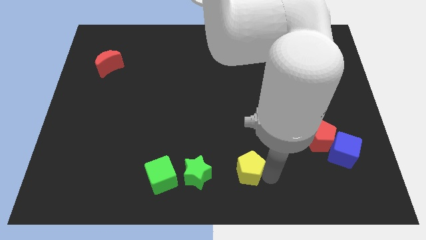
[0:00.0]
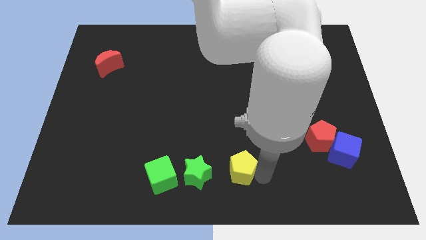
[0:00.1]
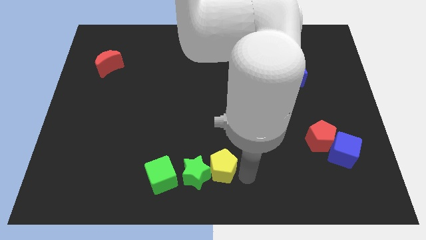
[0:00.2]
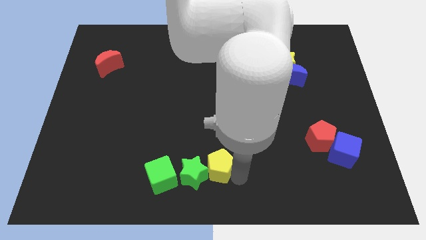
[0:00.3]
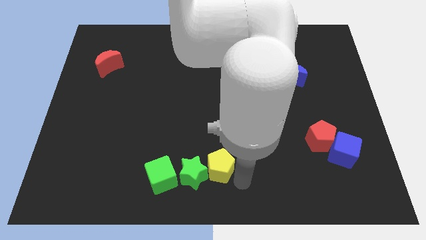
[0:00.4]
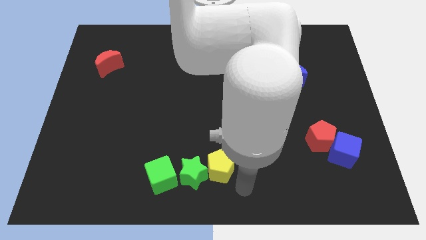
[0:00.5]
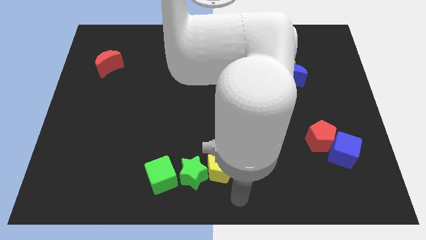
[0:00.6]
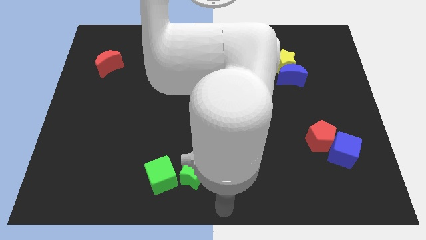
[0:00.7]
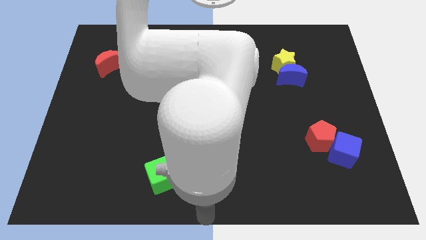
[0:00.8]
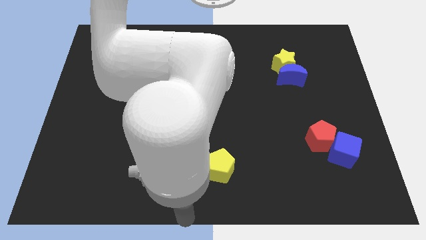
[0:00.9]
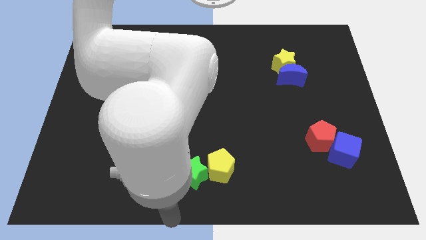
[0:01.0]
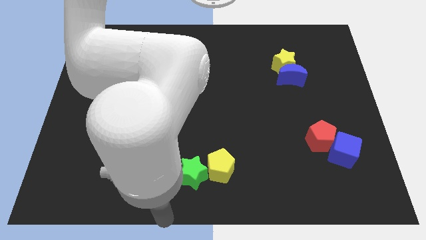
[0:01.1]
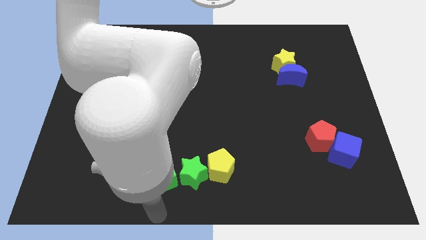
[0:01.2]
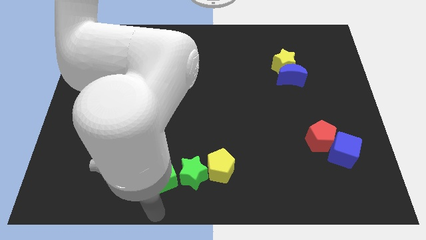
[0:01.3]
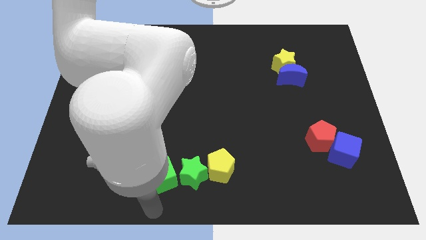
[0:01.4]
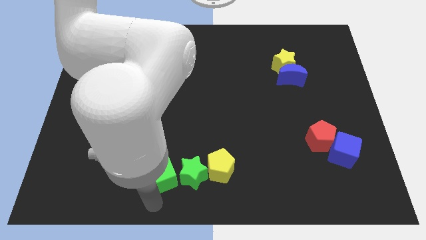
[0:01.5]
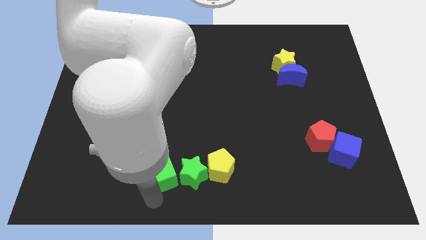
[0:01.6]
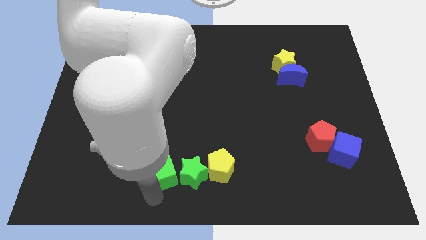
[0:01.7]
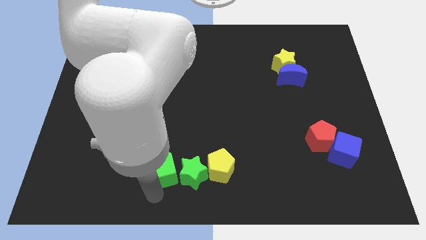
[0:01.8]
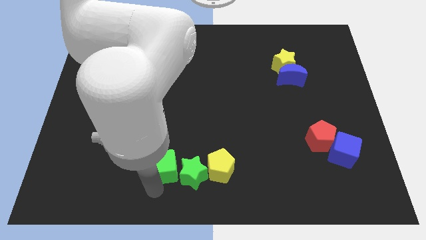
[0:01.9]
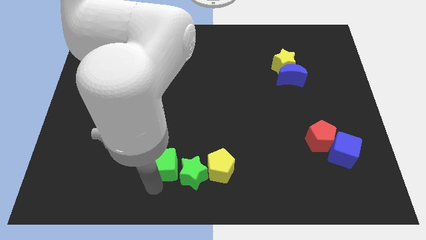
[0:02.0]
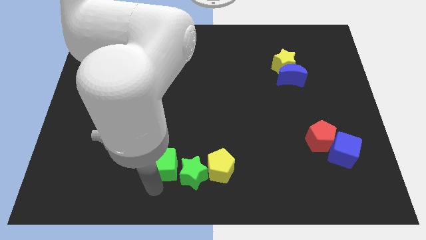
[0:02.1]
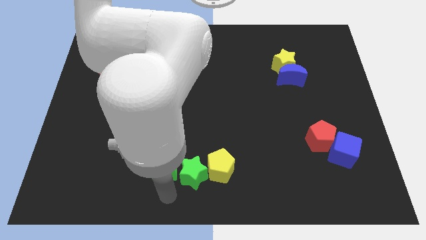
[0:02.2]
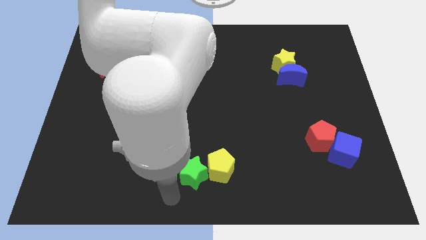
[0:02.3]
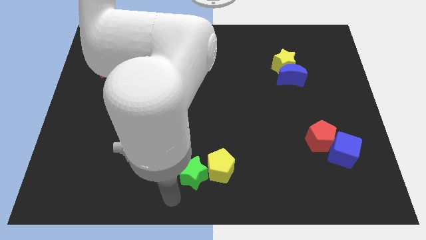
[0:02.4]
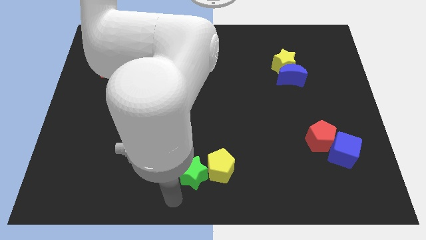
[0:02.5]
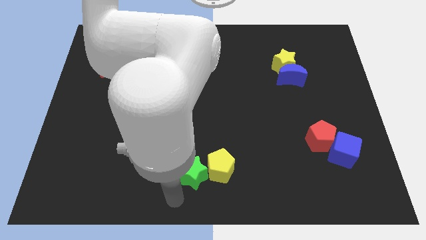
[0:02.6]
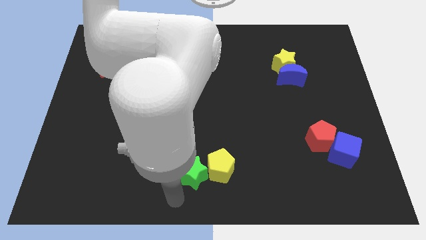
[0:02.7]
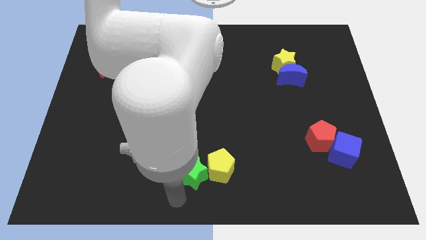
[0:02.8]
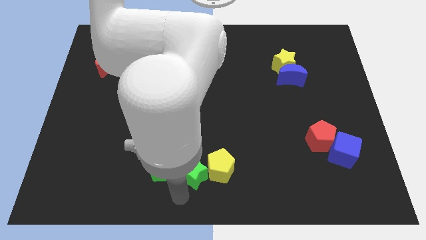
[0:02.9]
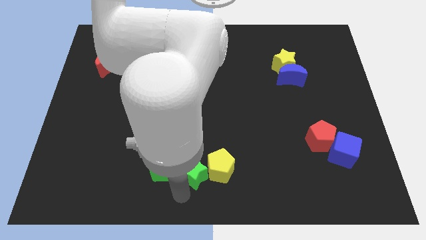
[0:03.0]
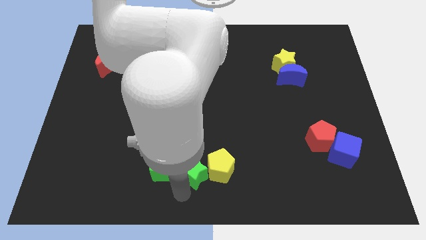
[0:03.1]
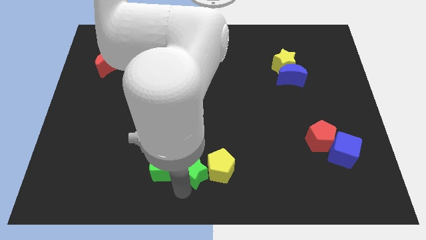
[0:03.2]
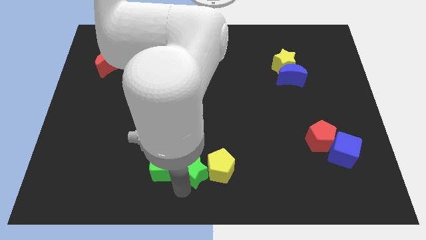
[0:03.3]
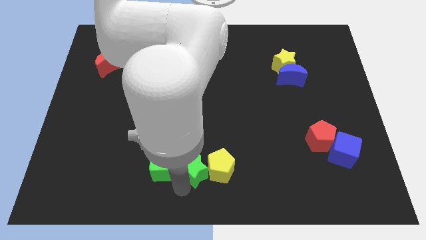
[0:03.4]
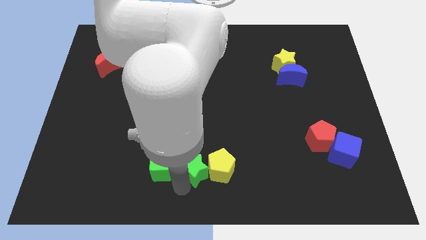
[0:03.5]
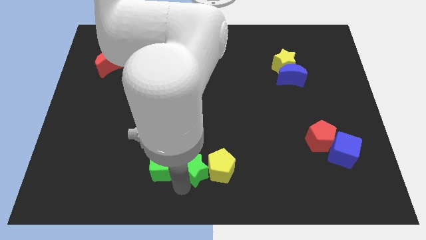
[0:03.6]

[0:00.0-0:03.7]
make a horizontal line out of green blocks and the yellow pentagon

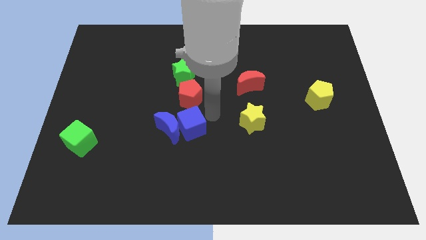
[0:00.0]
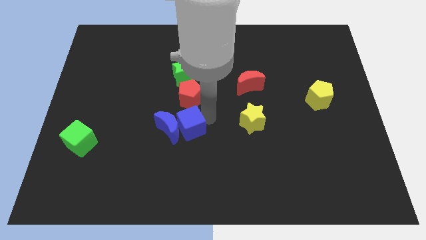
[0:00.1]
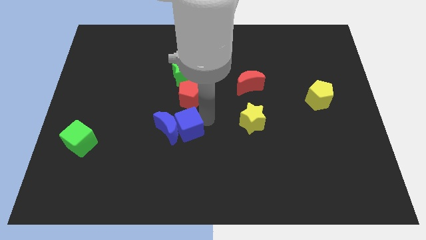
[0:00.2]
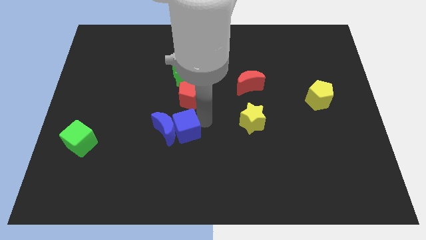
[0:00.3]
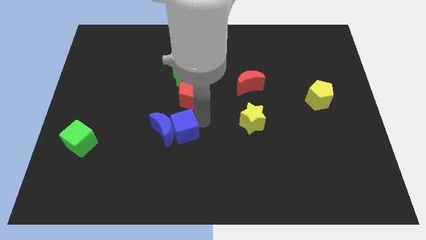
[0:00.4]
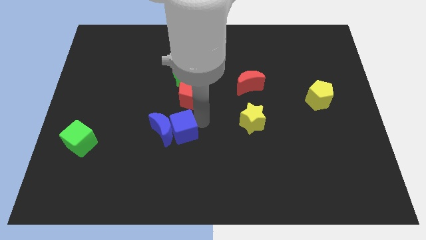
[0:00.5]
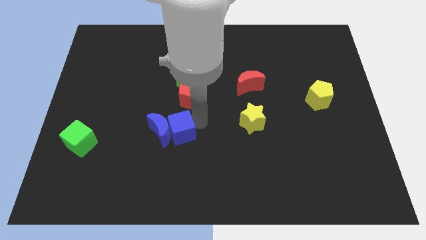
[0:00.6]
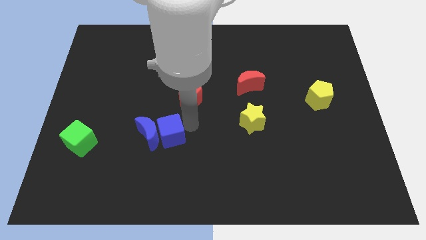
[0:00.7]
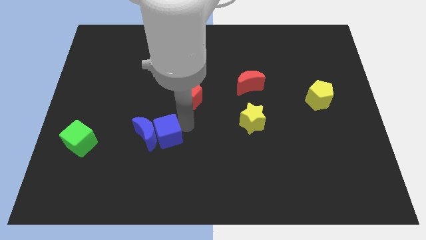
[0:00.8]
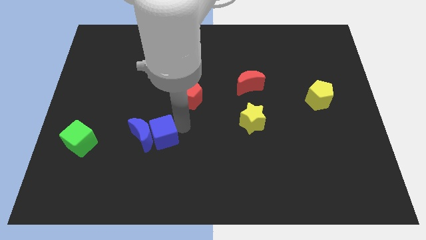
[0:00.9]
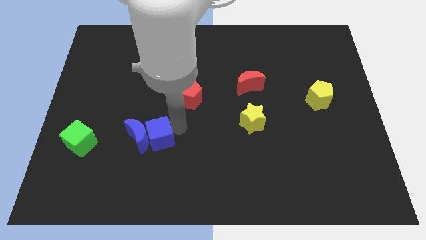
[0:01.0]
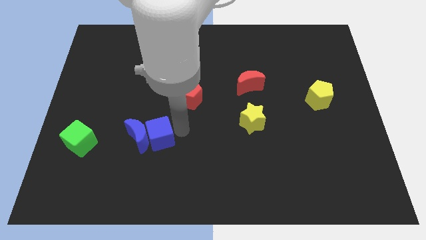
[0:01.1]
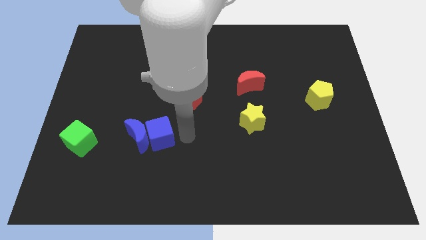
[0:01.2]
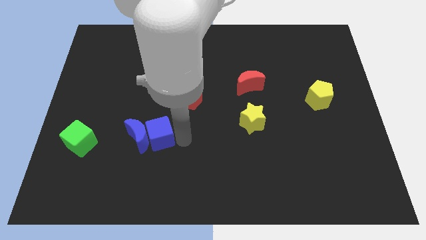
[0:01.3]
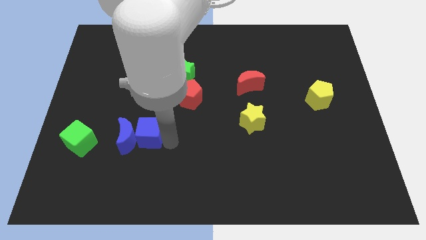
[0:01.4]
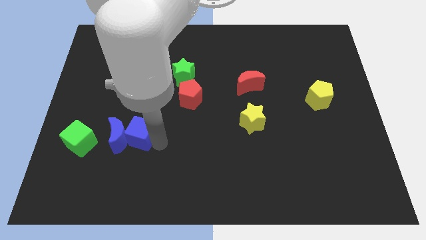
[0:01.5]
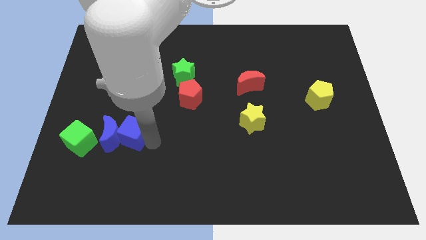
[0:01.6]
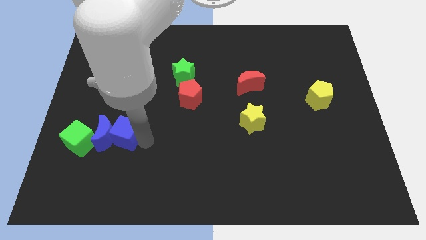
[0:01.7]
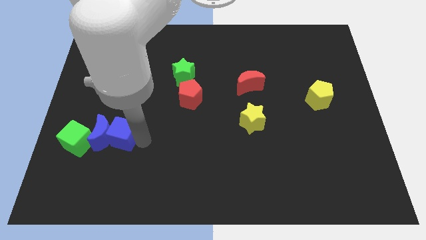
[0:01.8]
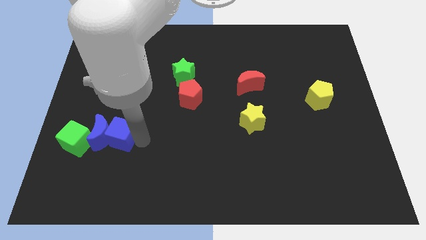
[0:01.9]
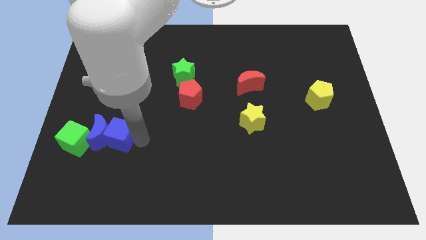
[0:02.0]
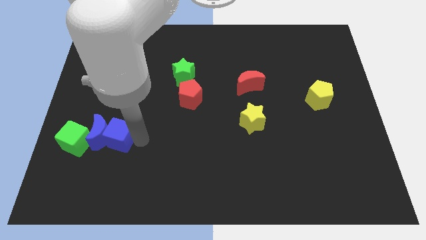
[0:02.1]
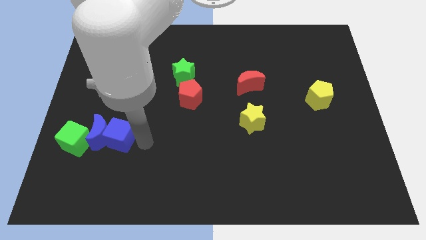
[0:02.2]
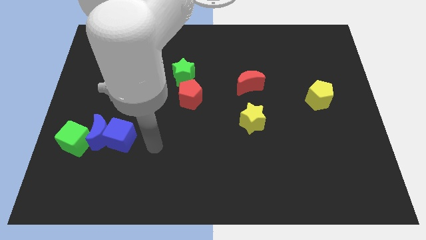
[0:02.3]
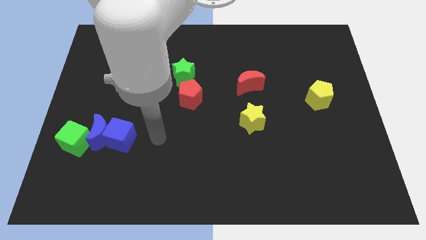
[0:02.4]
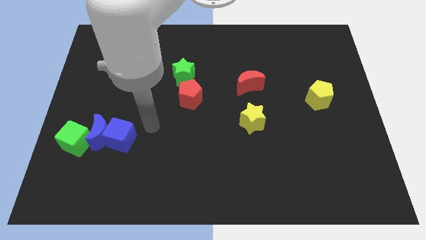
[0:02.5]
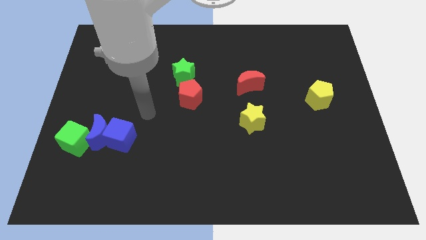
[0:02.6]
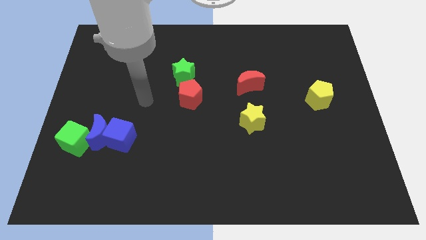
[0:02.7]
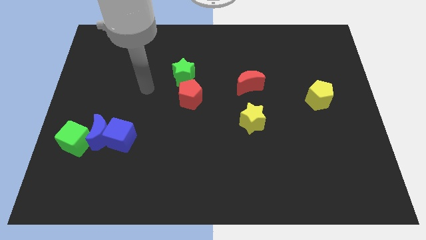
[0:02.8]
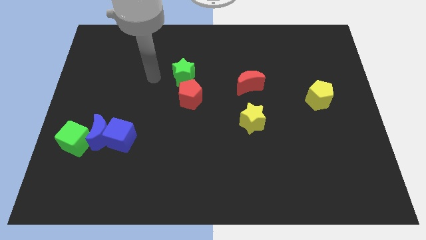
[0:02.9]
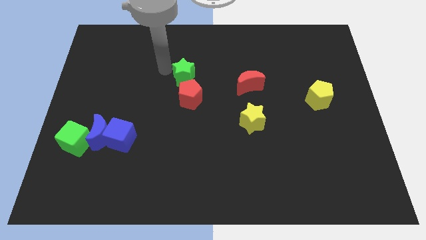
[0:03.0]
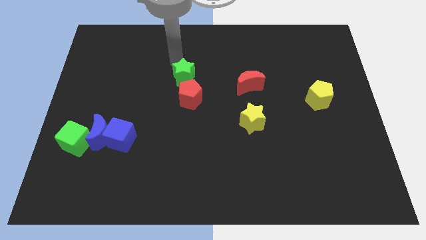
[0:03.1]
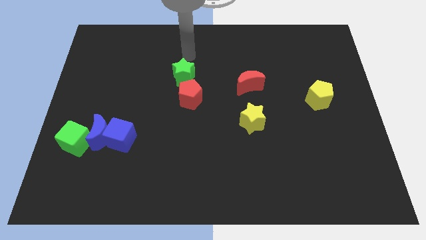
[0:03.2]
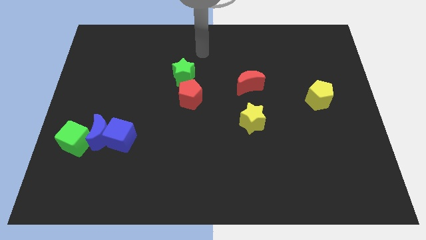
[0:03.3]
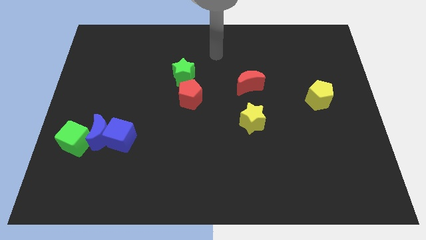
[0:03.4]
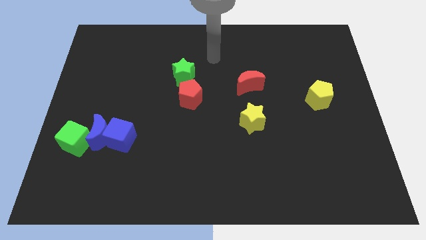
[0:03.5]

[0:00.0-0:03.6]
push the blue cube and blue crescent to the right side of the green cube

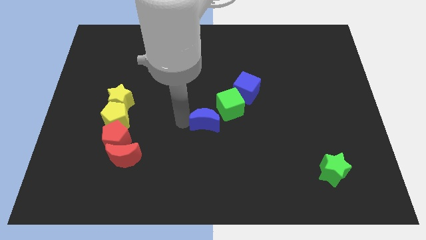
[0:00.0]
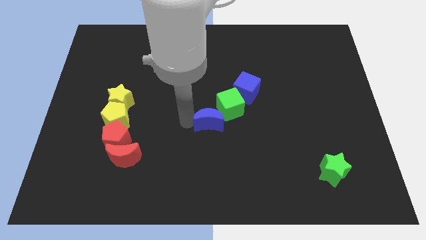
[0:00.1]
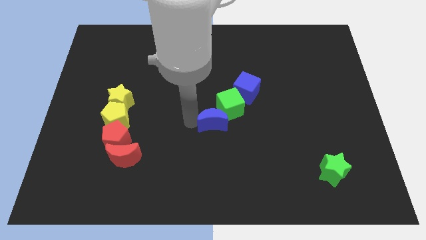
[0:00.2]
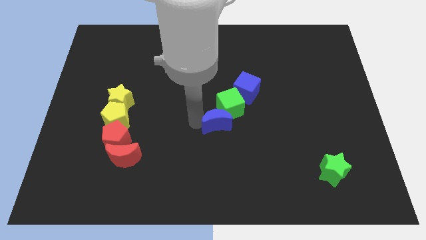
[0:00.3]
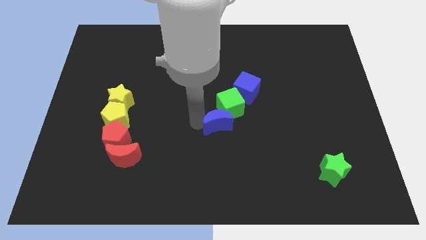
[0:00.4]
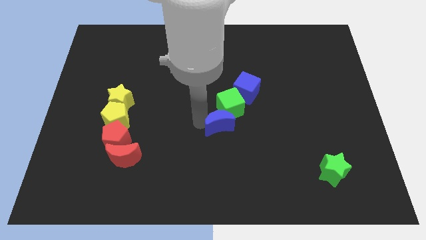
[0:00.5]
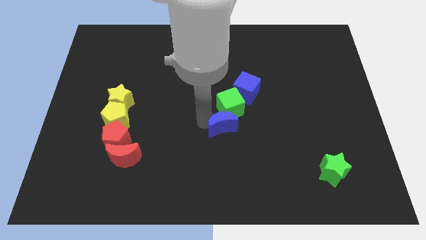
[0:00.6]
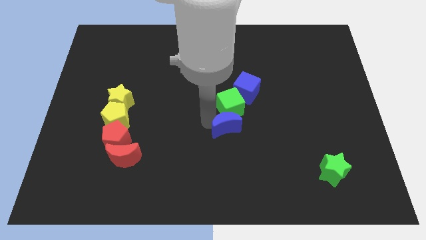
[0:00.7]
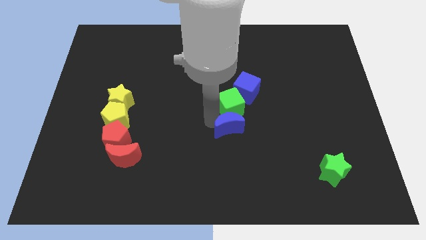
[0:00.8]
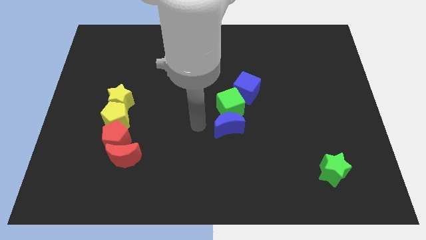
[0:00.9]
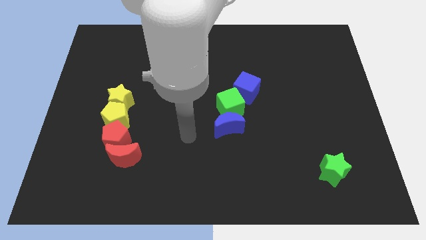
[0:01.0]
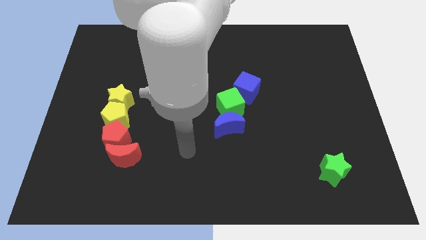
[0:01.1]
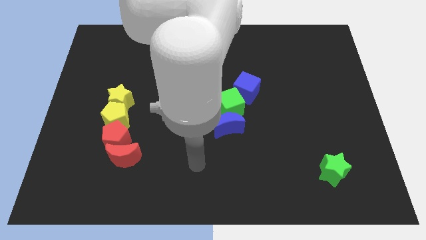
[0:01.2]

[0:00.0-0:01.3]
place the blue moon vertically below the green cube

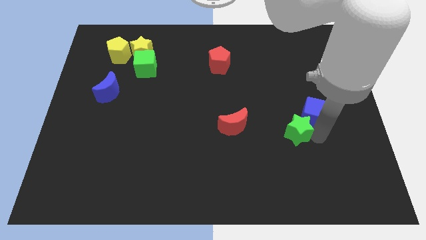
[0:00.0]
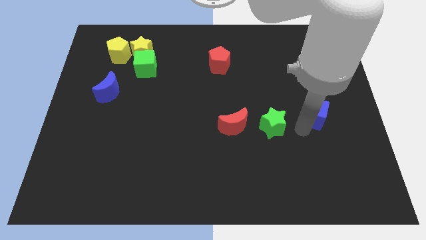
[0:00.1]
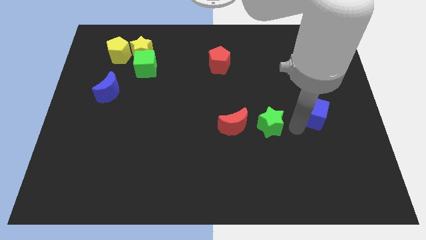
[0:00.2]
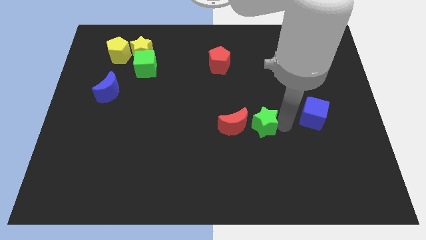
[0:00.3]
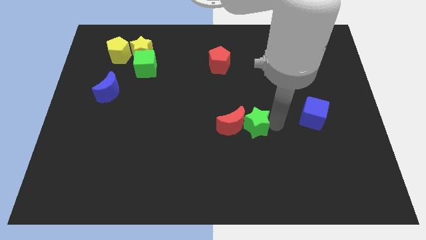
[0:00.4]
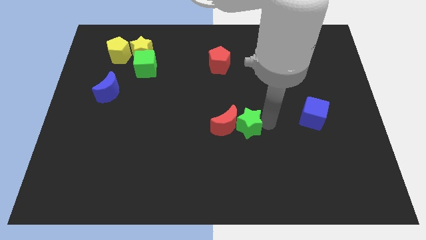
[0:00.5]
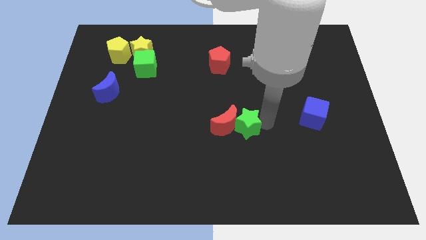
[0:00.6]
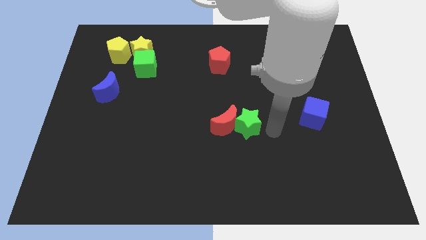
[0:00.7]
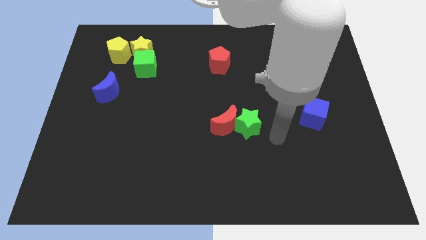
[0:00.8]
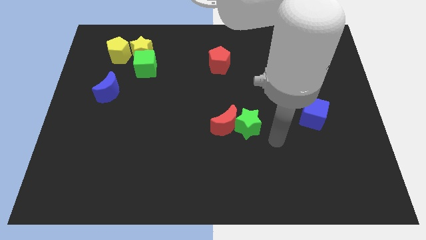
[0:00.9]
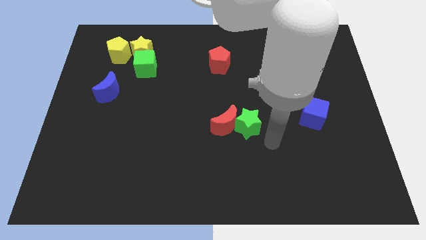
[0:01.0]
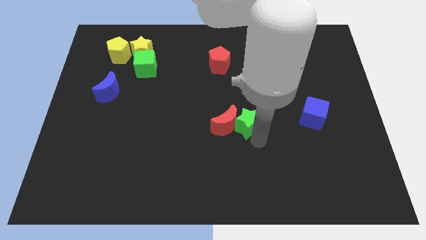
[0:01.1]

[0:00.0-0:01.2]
push the green star close to the red moon
